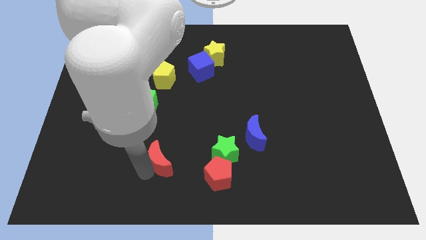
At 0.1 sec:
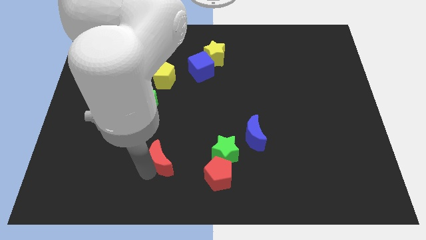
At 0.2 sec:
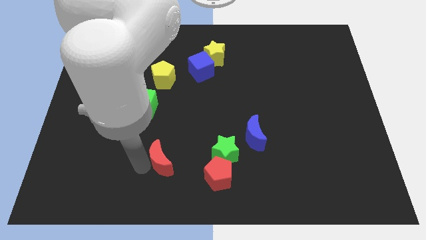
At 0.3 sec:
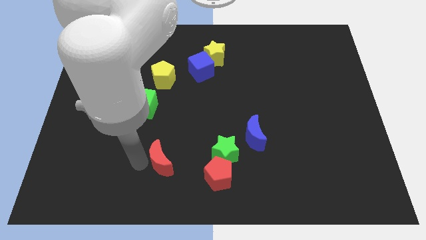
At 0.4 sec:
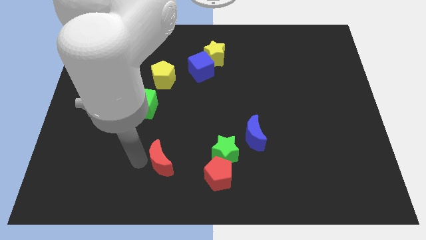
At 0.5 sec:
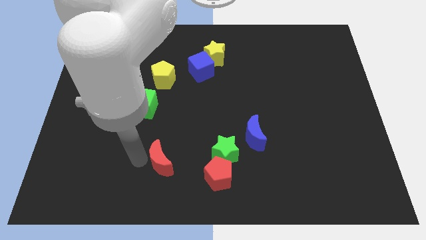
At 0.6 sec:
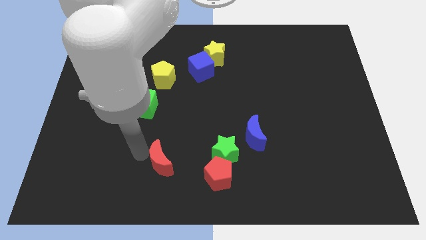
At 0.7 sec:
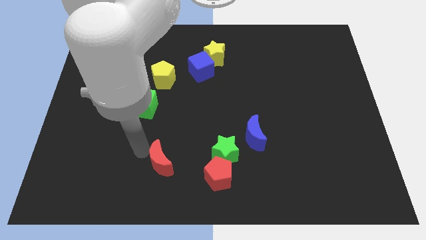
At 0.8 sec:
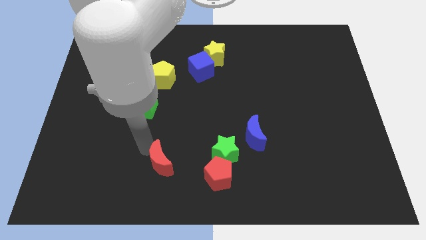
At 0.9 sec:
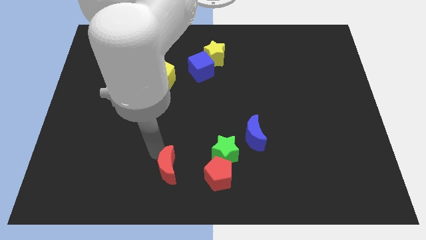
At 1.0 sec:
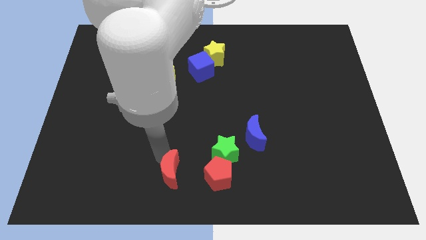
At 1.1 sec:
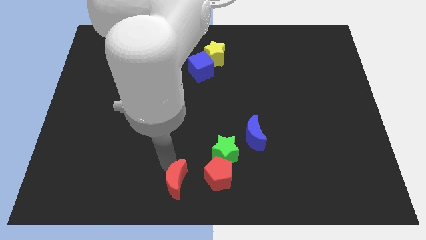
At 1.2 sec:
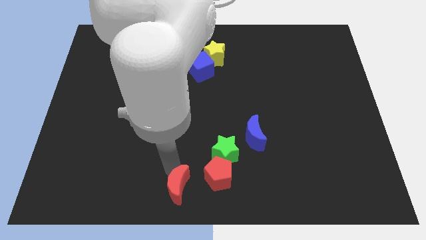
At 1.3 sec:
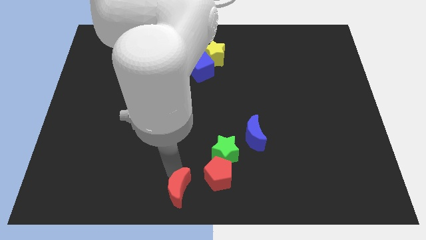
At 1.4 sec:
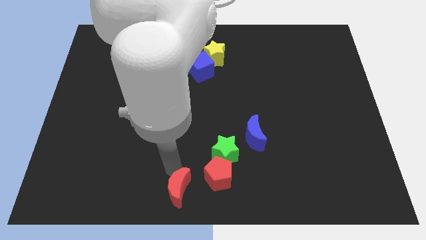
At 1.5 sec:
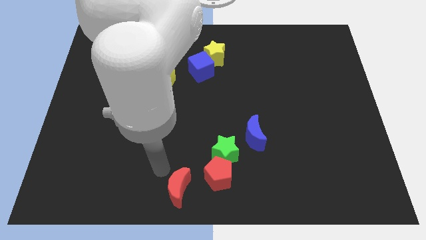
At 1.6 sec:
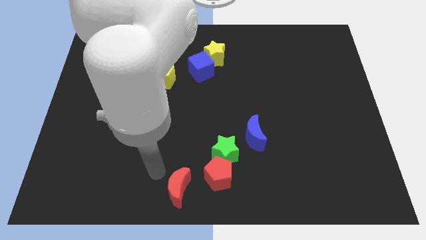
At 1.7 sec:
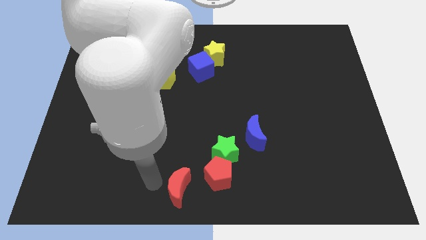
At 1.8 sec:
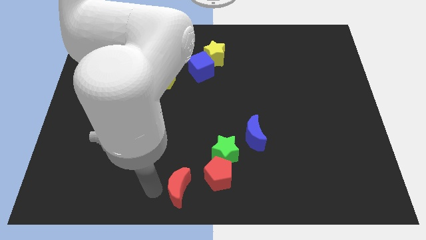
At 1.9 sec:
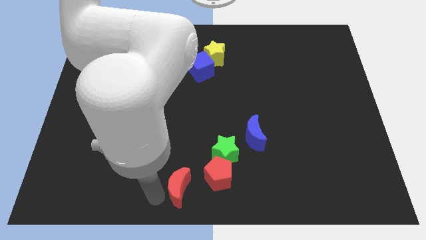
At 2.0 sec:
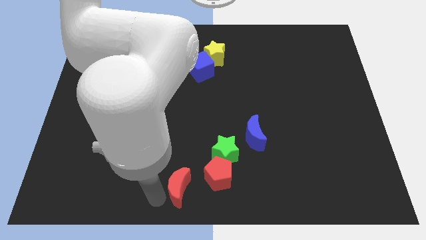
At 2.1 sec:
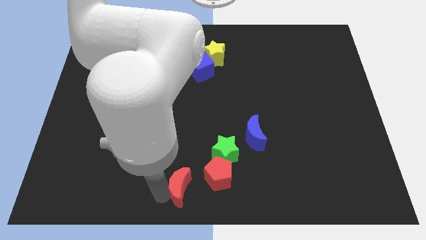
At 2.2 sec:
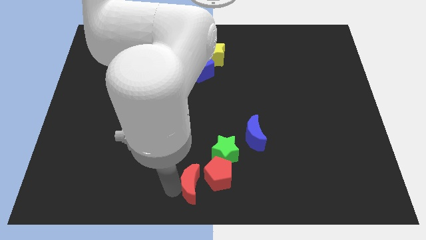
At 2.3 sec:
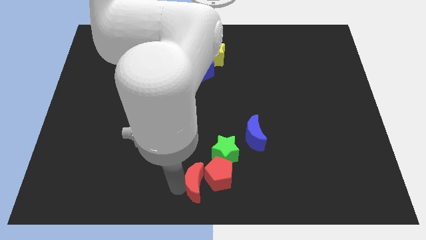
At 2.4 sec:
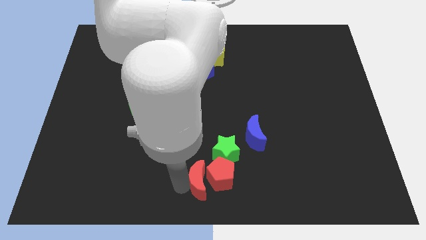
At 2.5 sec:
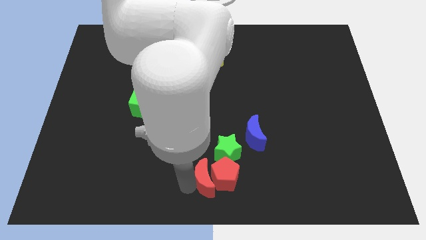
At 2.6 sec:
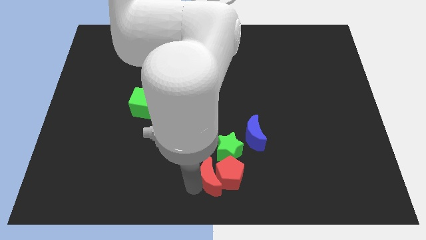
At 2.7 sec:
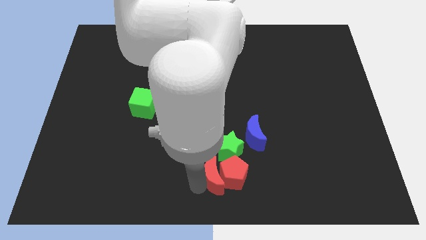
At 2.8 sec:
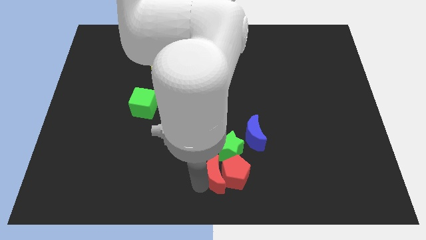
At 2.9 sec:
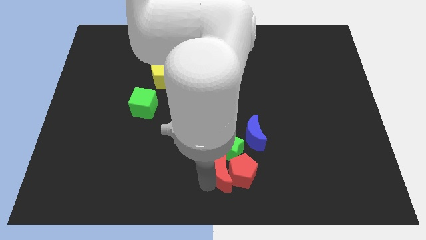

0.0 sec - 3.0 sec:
move the red moon left side of the red pentagon

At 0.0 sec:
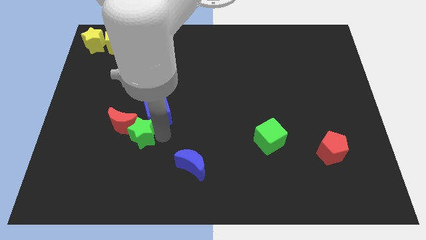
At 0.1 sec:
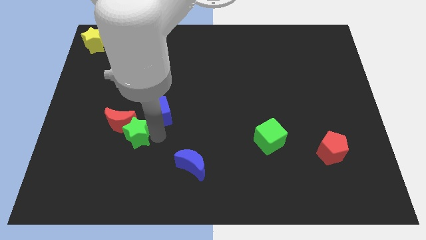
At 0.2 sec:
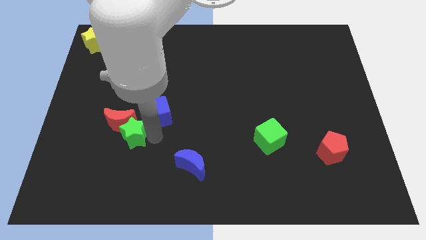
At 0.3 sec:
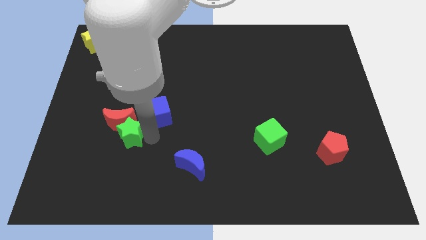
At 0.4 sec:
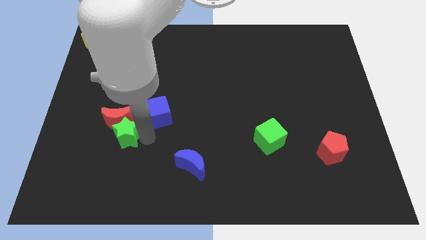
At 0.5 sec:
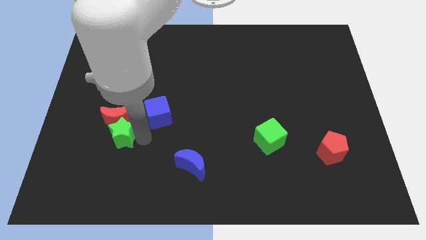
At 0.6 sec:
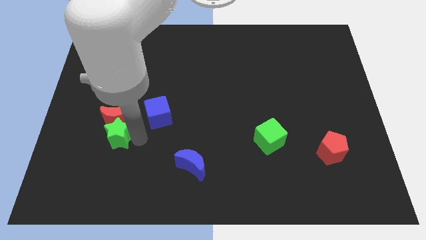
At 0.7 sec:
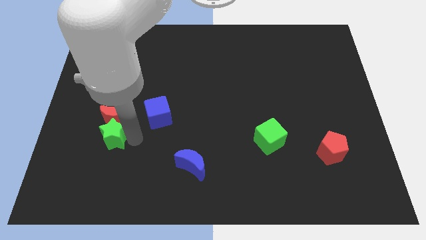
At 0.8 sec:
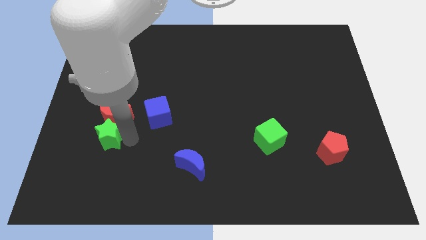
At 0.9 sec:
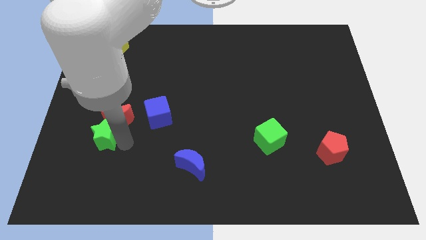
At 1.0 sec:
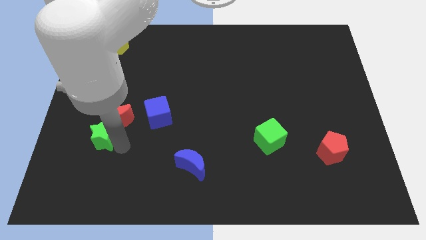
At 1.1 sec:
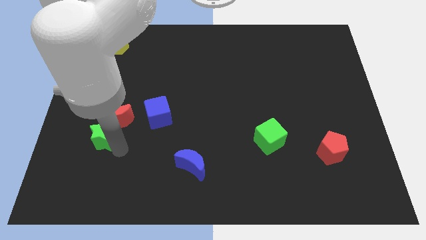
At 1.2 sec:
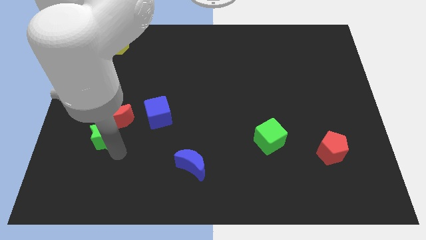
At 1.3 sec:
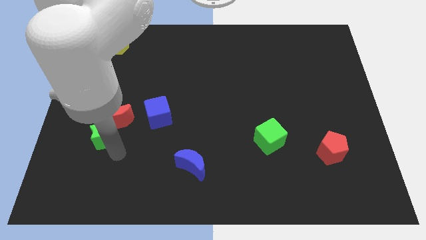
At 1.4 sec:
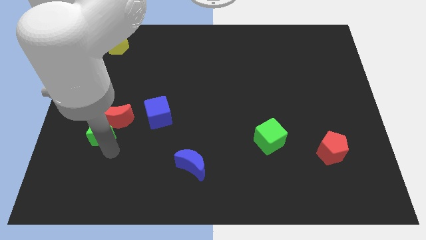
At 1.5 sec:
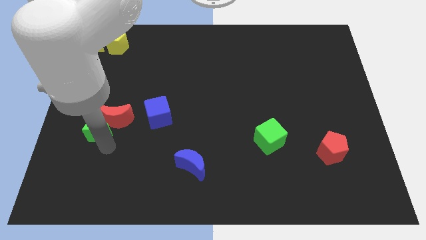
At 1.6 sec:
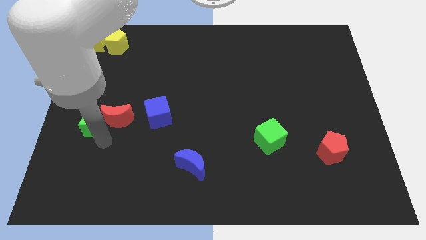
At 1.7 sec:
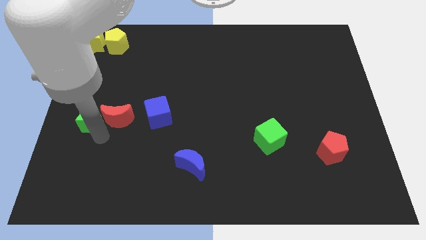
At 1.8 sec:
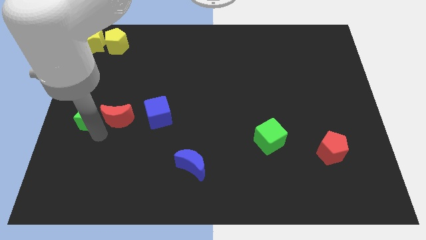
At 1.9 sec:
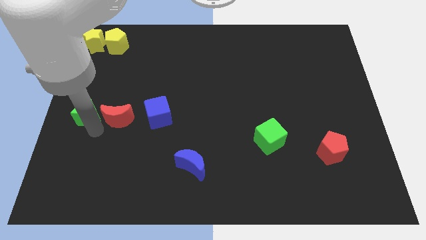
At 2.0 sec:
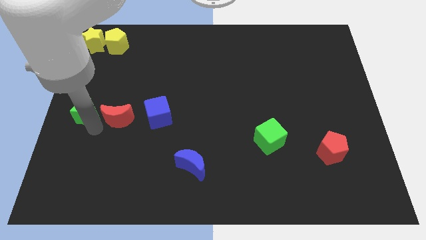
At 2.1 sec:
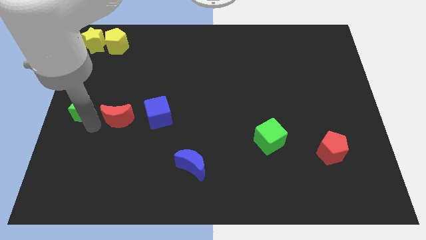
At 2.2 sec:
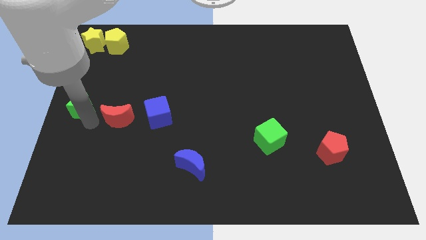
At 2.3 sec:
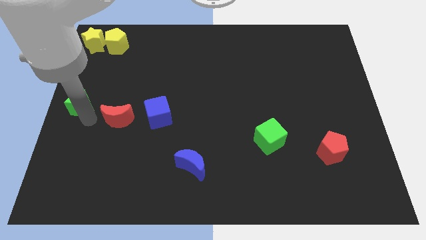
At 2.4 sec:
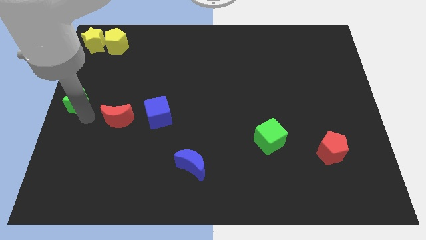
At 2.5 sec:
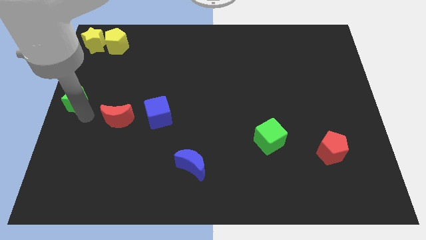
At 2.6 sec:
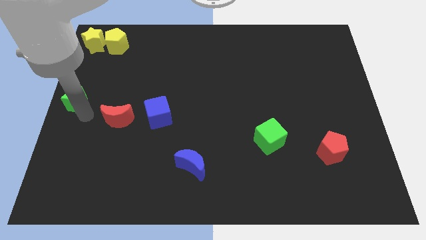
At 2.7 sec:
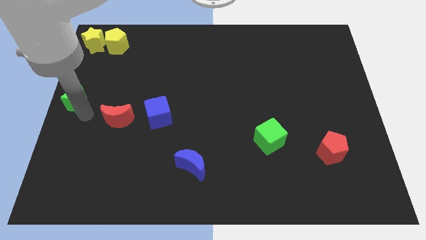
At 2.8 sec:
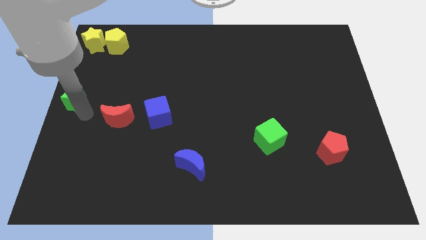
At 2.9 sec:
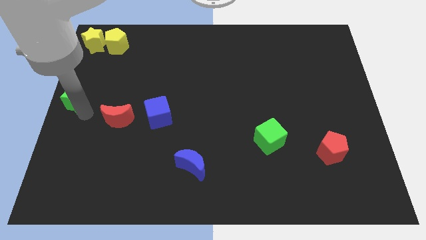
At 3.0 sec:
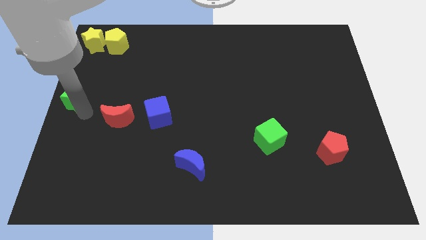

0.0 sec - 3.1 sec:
place a green star on the center left corner of the board

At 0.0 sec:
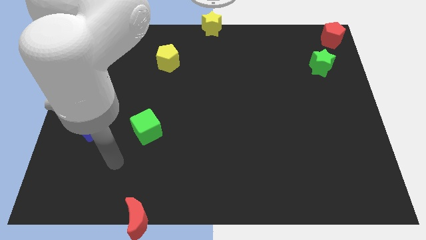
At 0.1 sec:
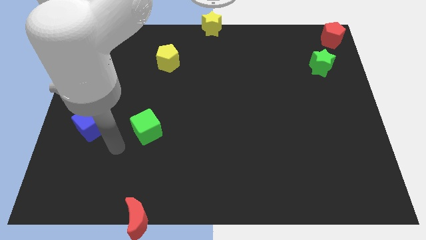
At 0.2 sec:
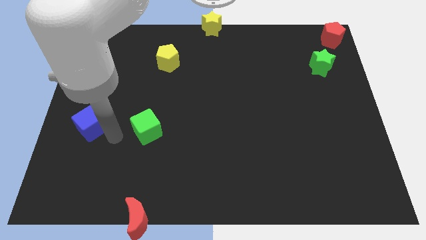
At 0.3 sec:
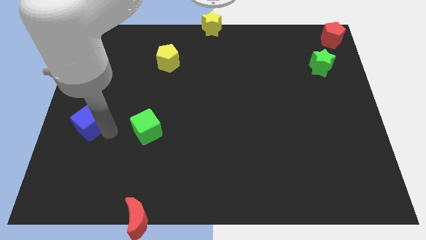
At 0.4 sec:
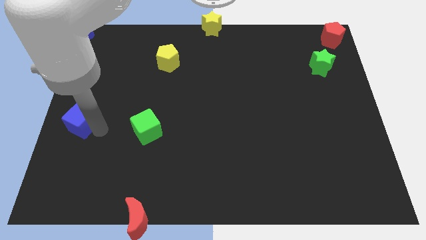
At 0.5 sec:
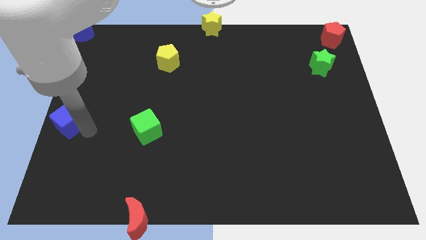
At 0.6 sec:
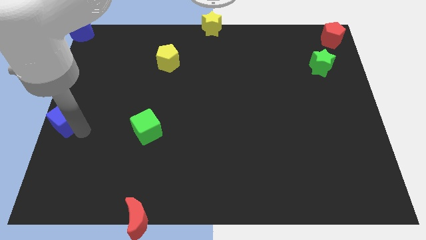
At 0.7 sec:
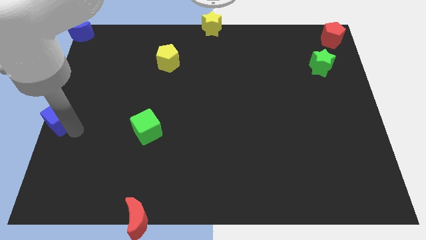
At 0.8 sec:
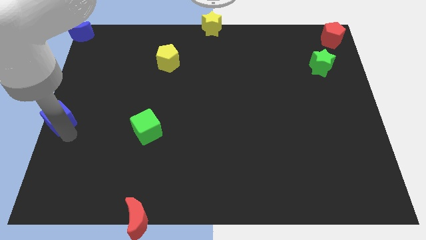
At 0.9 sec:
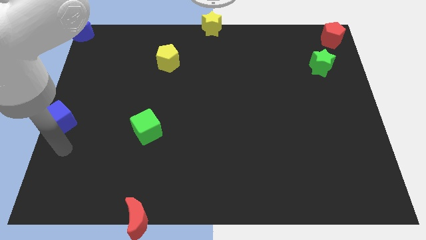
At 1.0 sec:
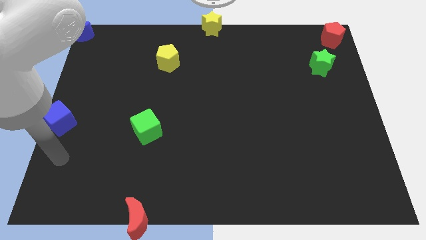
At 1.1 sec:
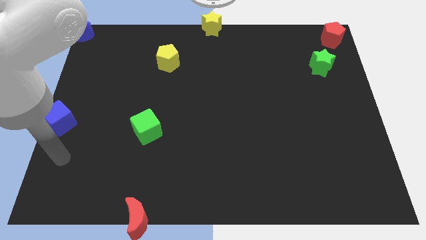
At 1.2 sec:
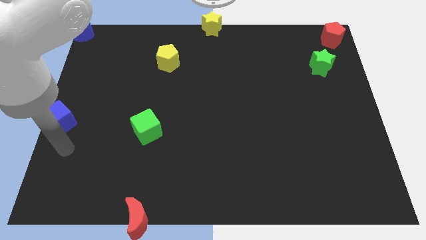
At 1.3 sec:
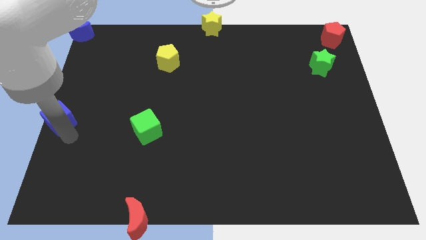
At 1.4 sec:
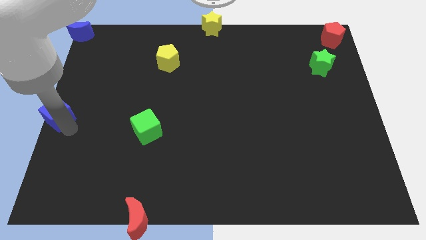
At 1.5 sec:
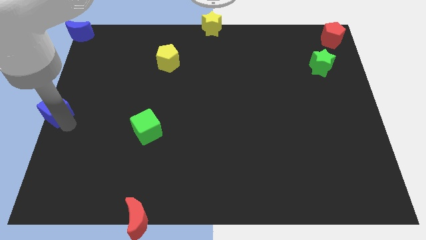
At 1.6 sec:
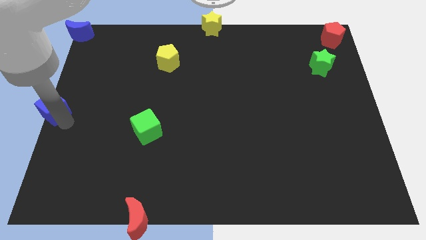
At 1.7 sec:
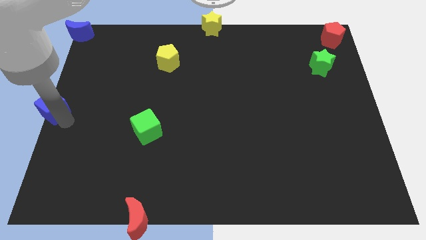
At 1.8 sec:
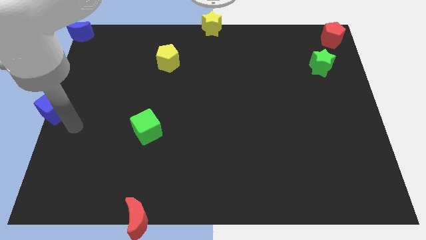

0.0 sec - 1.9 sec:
put the blue cube to the center left side of the board

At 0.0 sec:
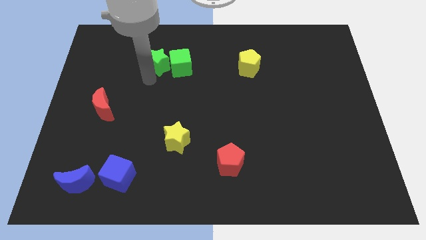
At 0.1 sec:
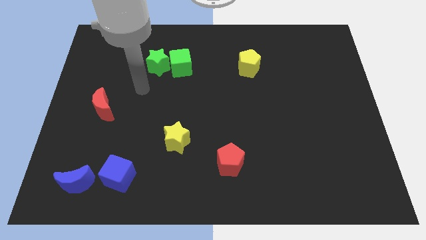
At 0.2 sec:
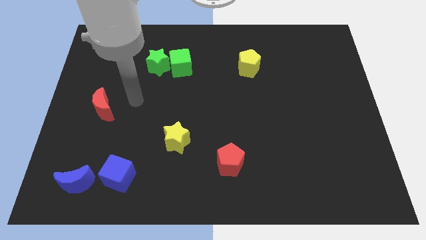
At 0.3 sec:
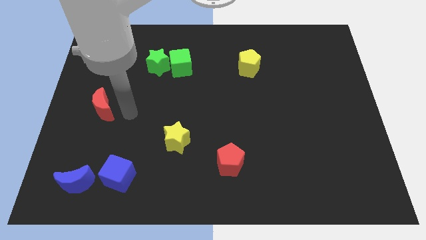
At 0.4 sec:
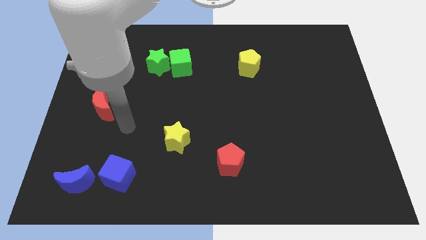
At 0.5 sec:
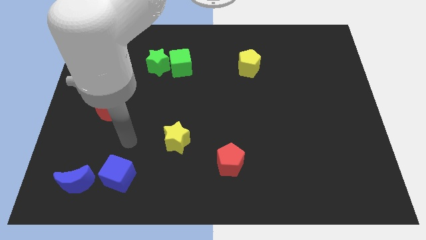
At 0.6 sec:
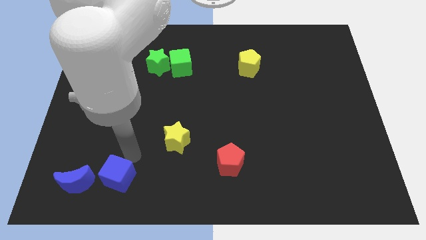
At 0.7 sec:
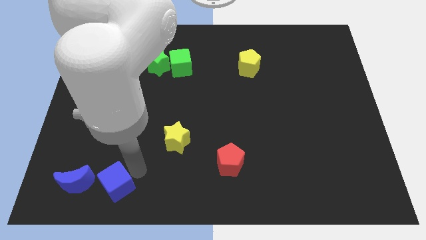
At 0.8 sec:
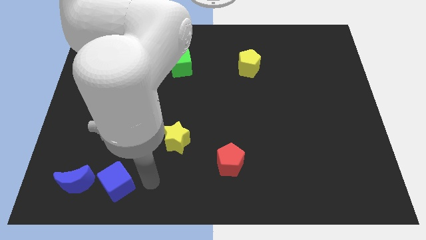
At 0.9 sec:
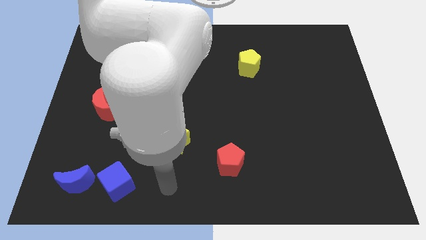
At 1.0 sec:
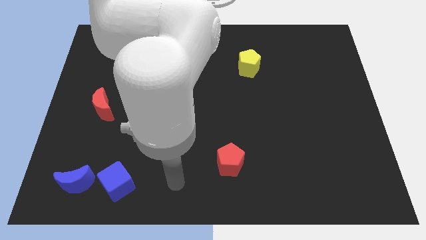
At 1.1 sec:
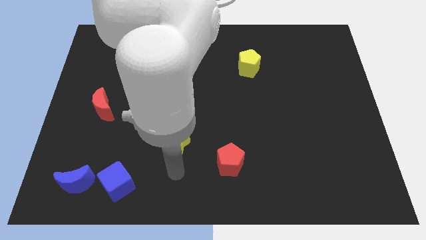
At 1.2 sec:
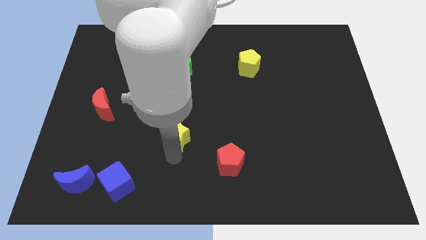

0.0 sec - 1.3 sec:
touch the blue cube
